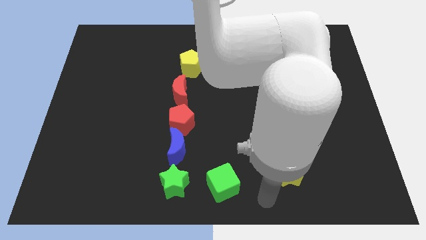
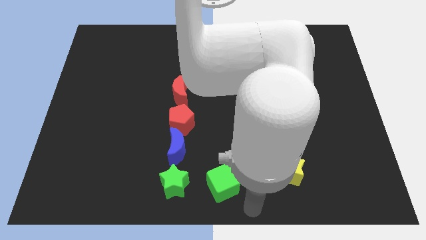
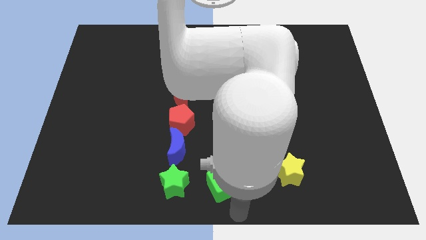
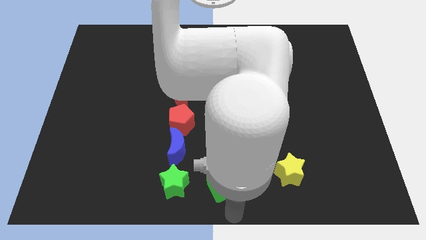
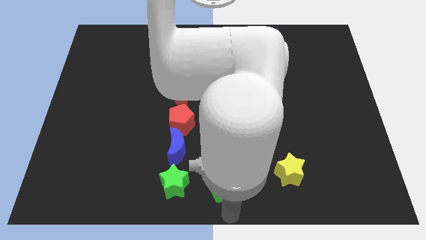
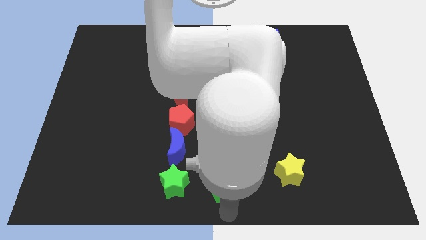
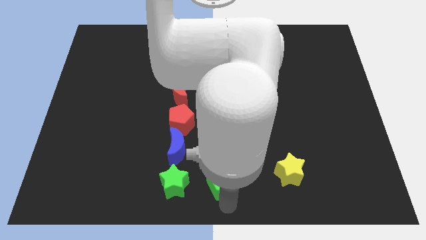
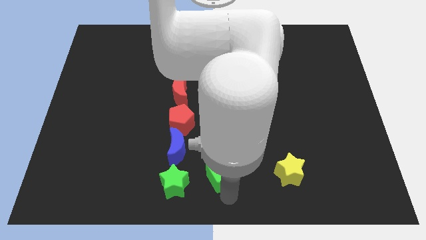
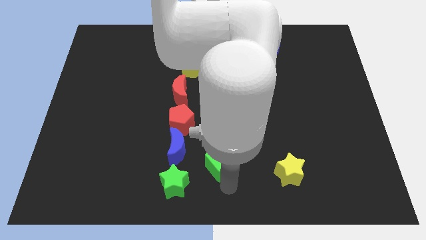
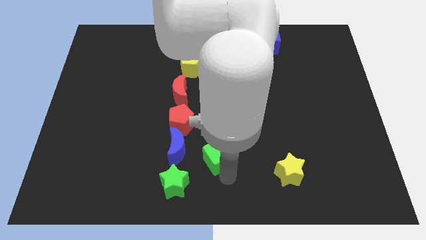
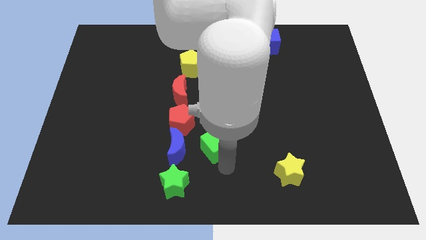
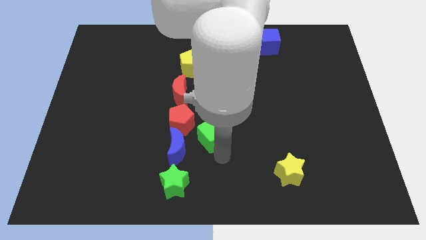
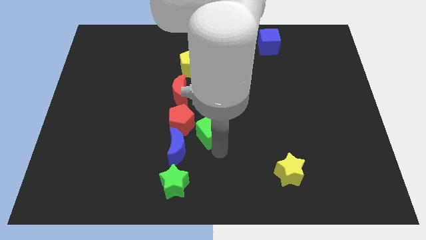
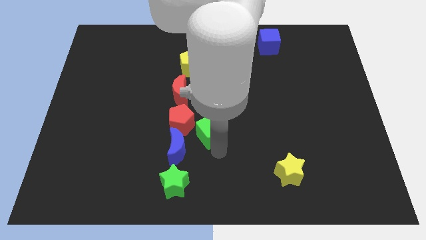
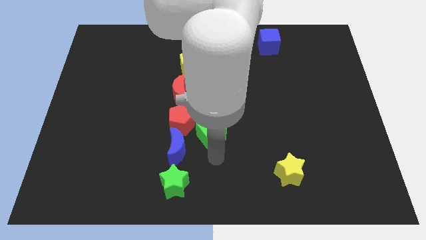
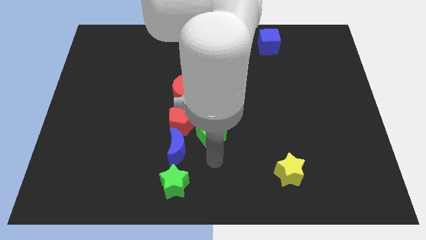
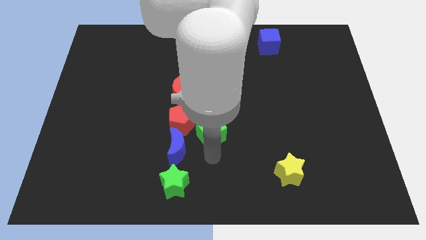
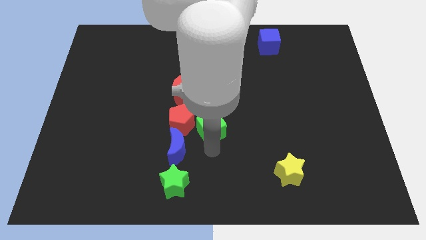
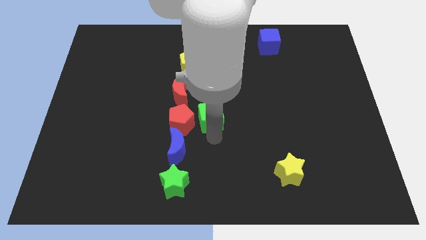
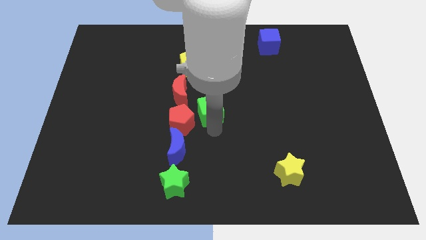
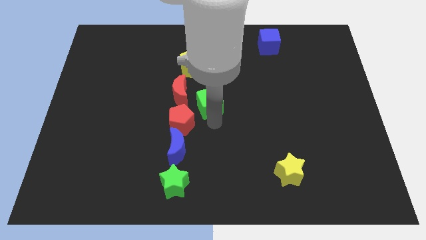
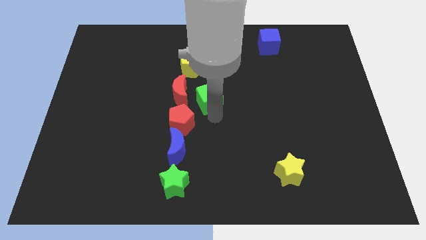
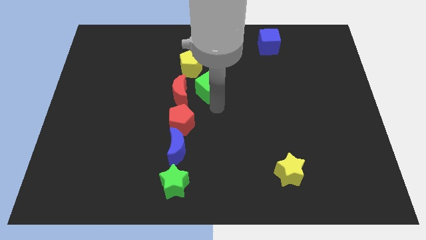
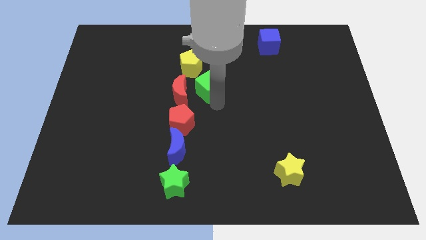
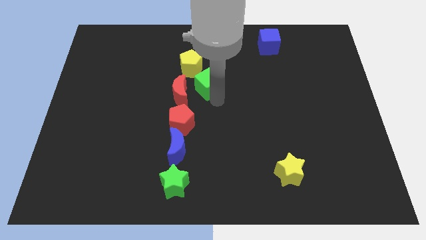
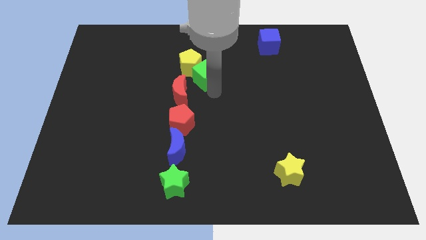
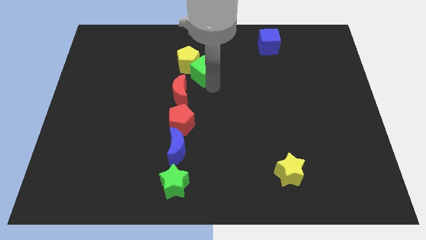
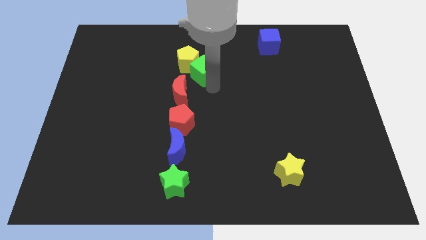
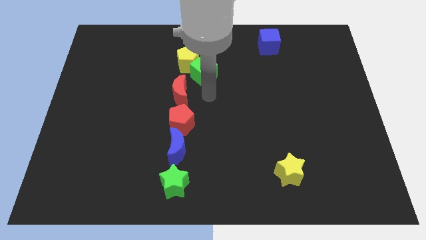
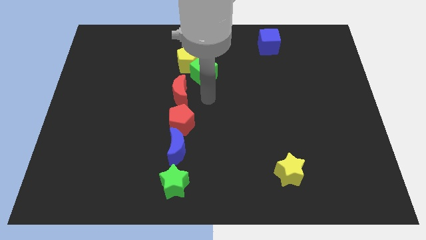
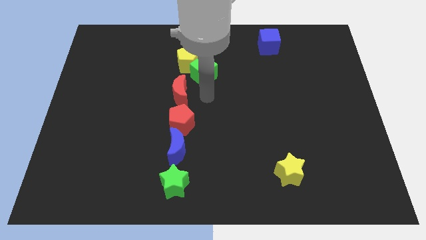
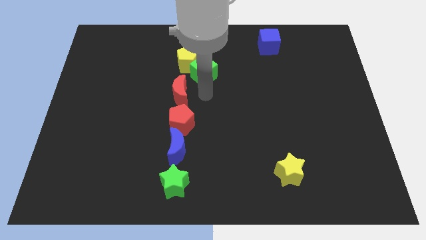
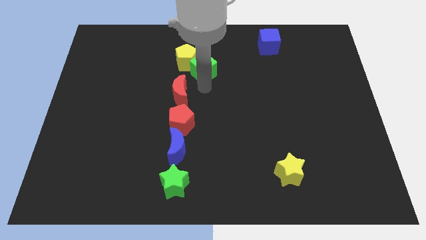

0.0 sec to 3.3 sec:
move green cube into yellow pentagon

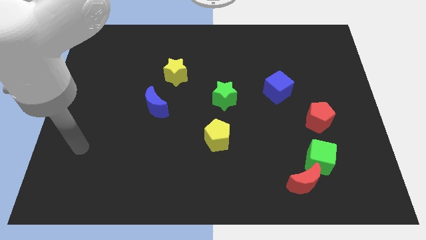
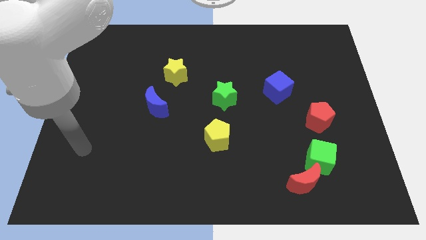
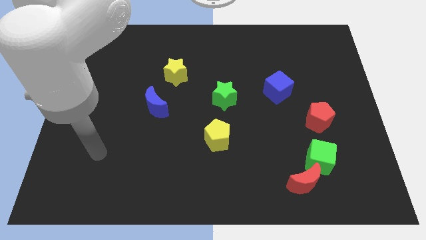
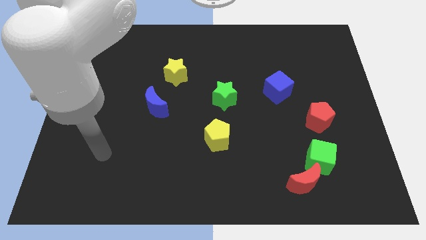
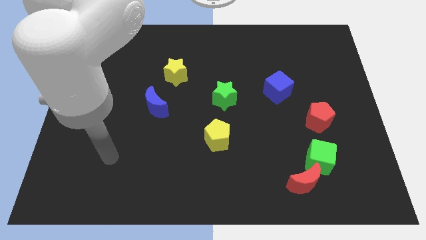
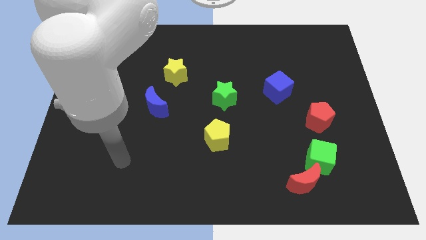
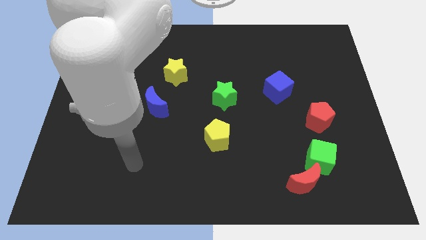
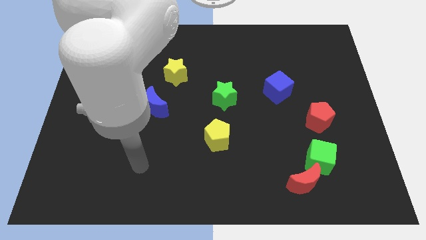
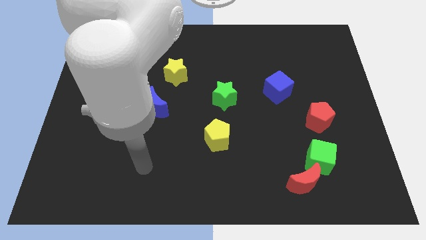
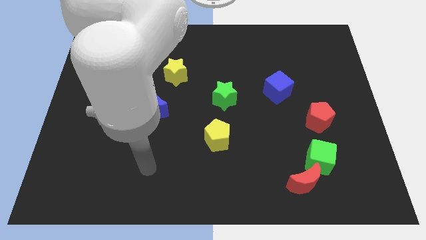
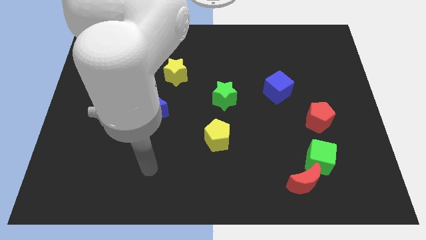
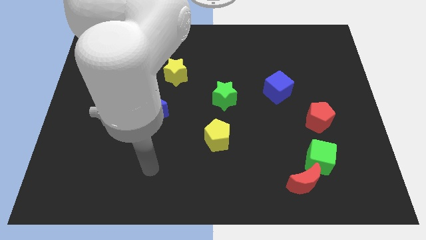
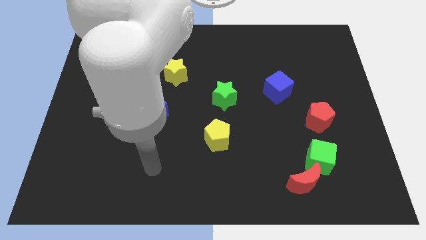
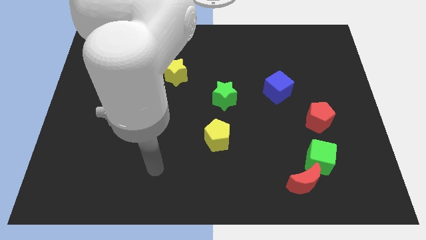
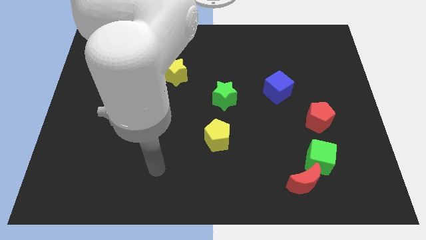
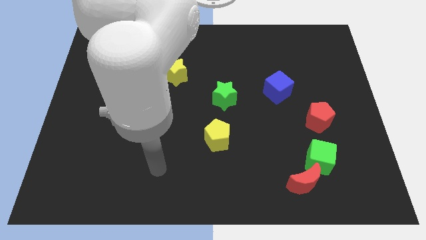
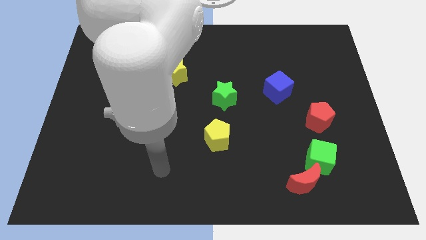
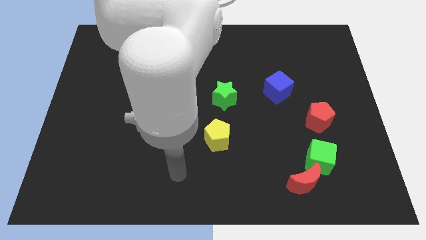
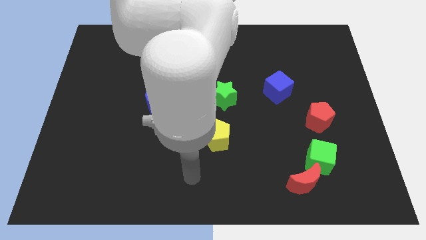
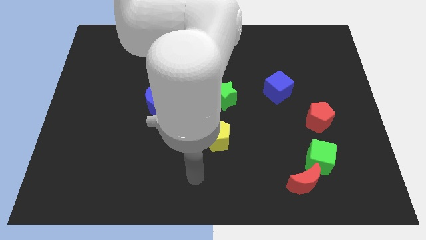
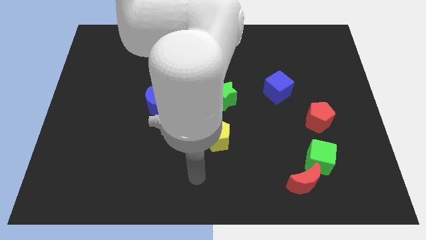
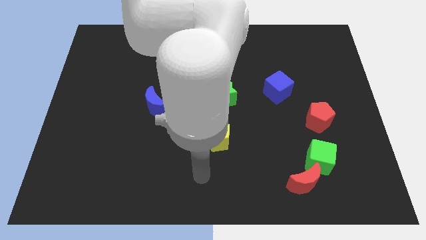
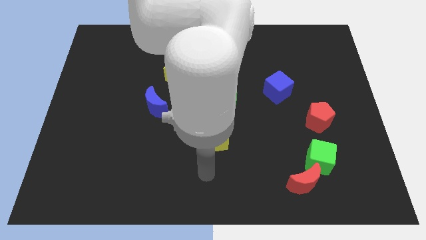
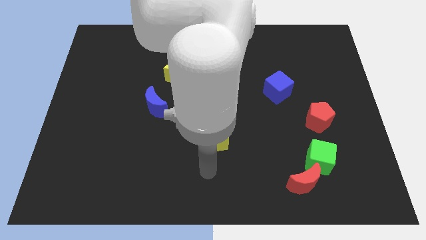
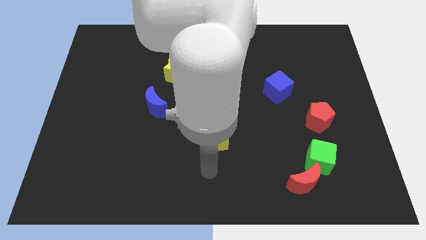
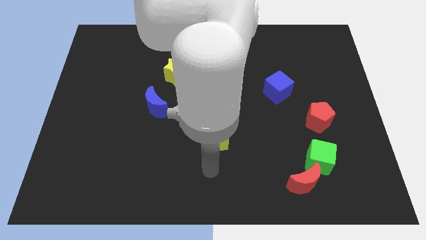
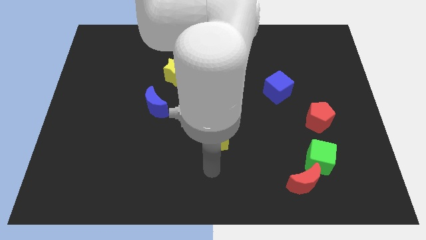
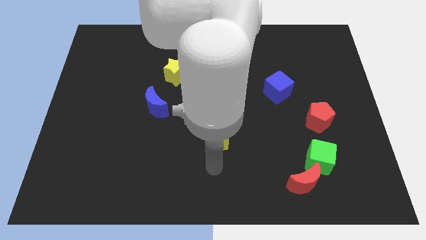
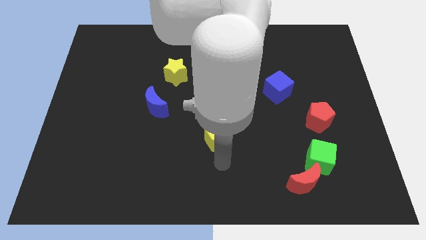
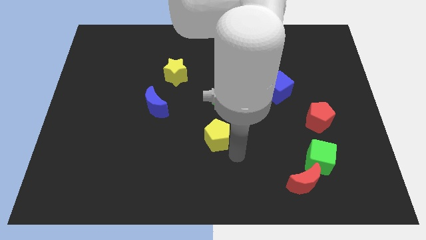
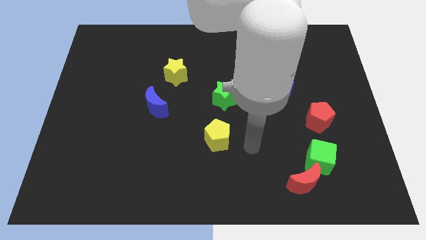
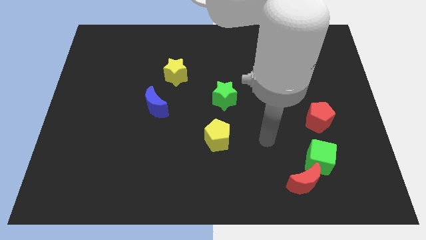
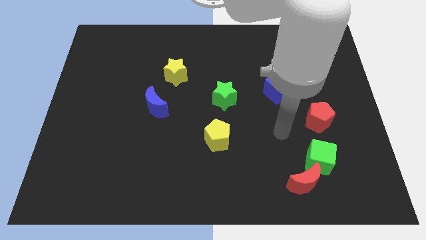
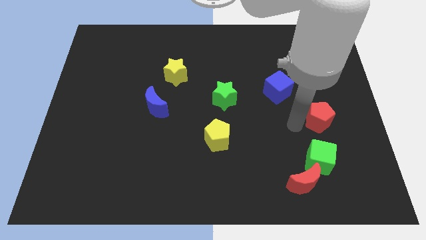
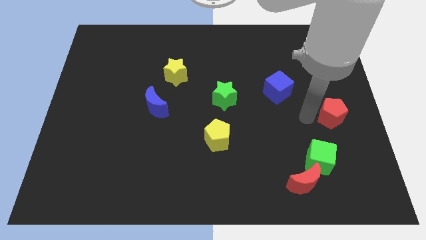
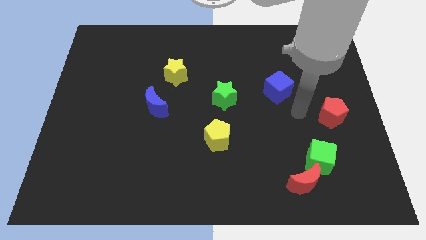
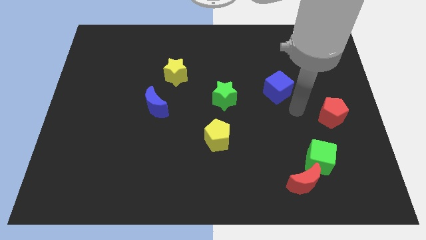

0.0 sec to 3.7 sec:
slightly push the red pentagon to the right of the board

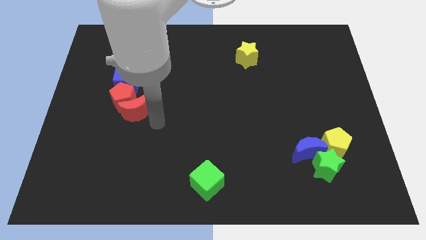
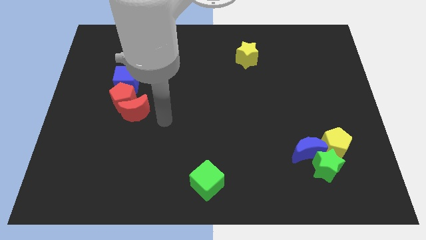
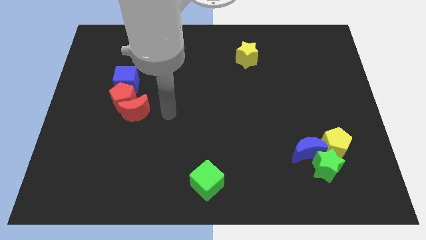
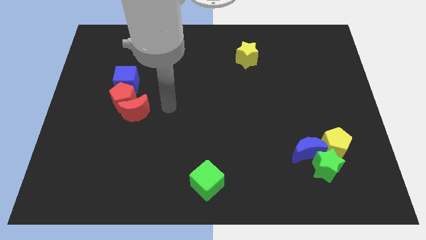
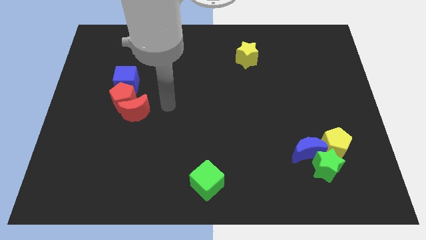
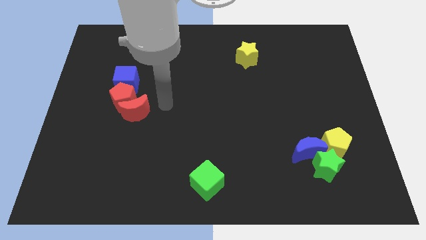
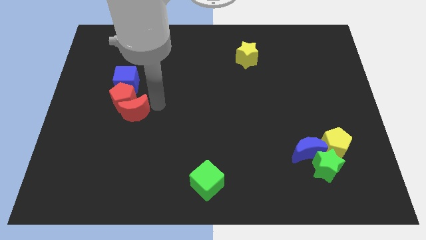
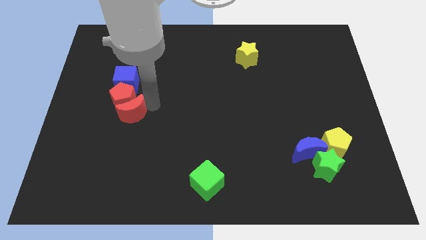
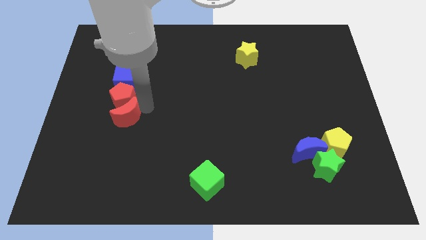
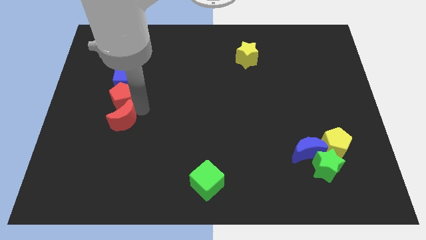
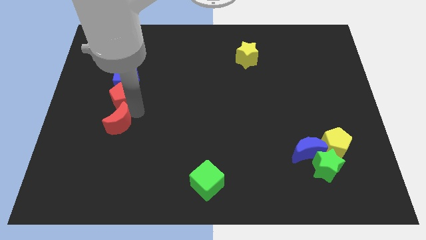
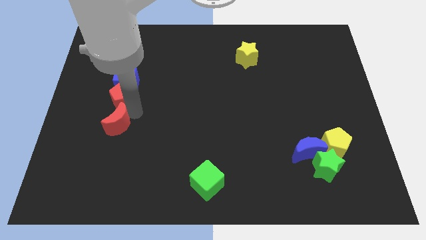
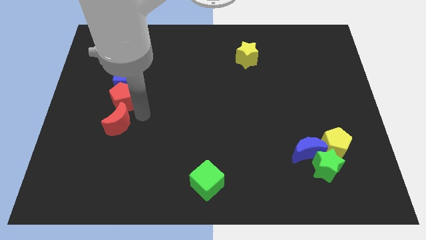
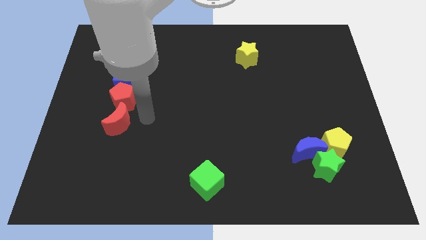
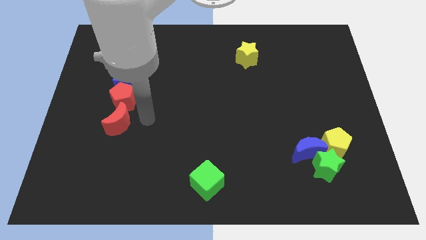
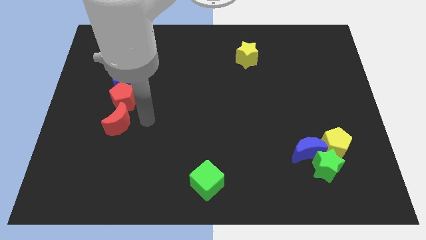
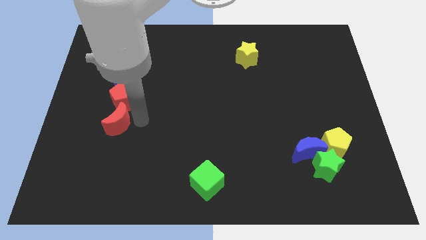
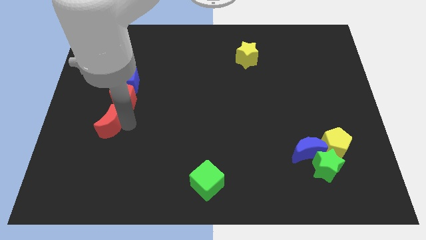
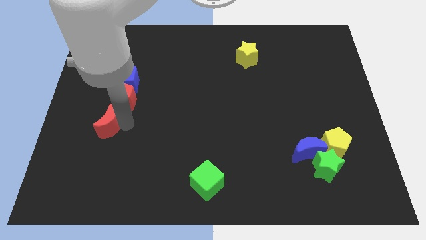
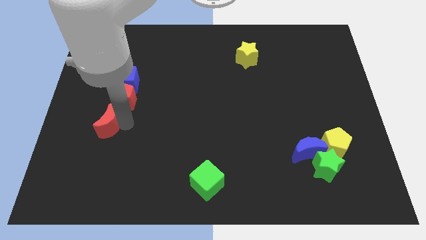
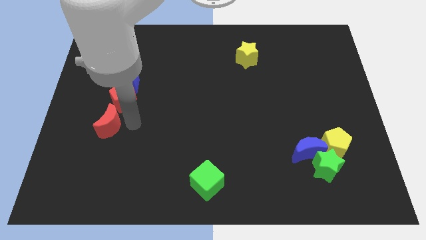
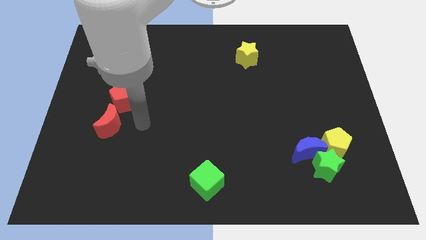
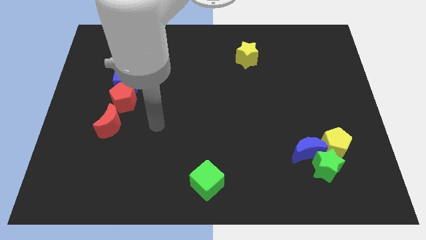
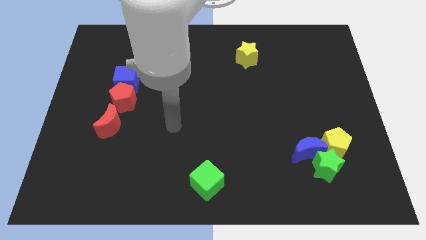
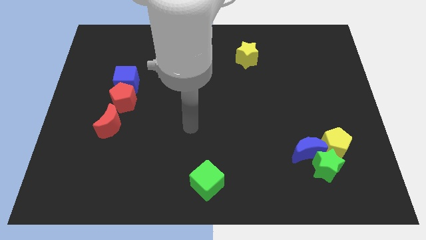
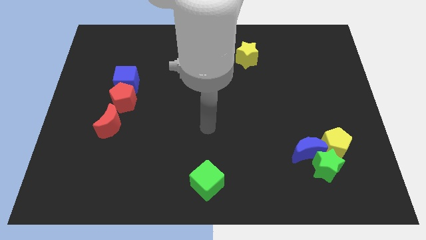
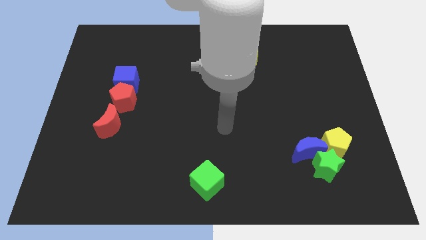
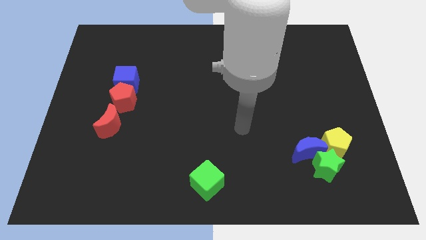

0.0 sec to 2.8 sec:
separate the red crescent from the red pentagon to the left
